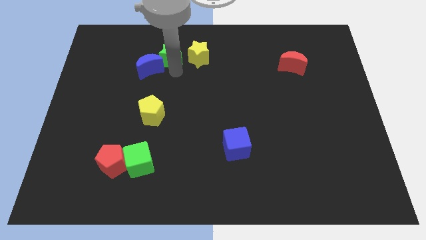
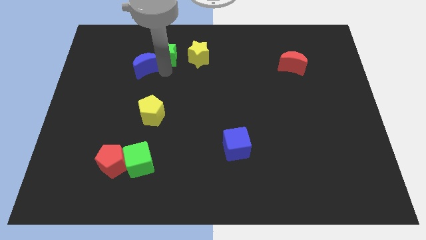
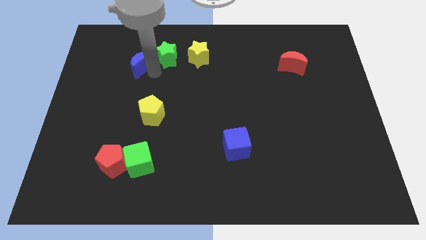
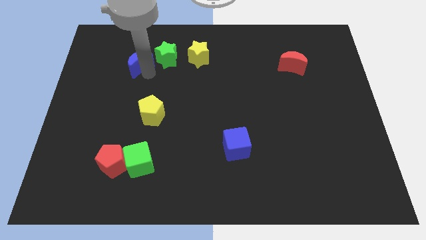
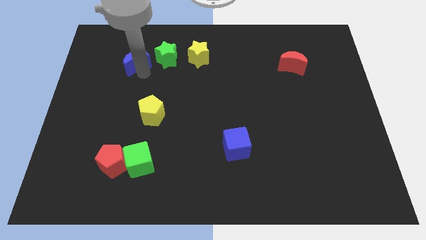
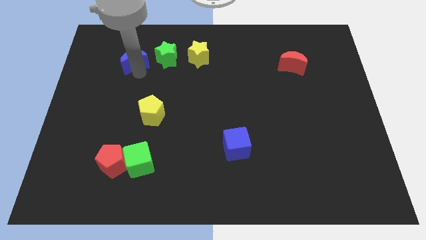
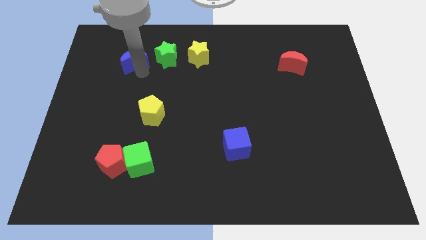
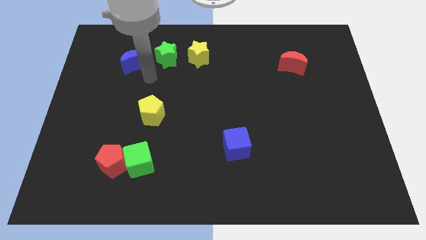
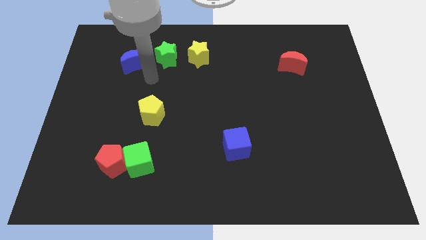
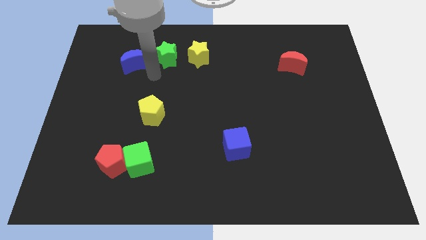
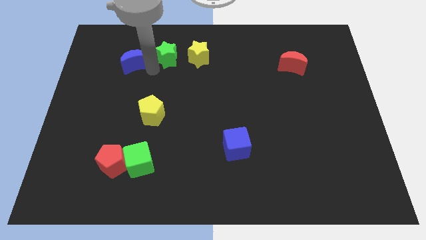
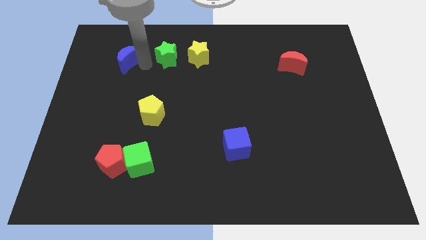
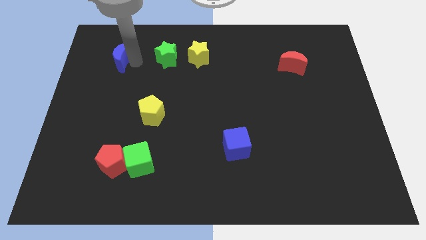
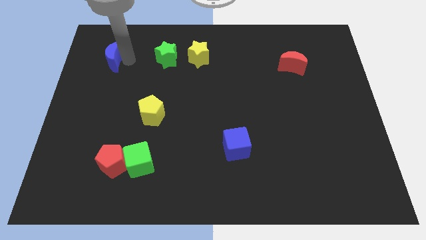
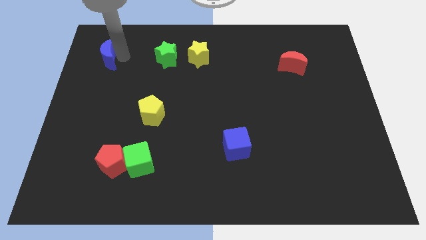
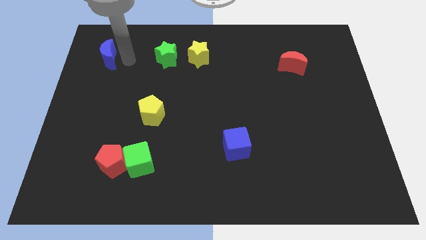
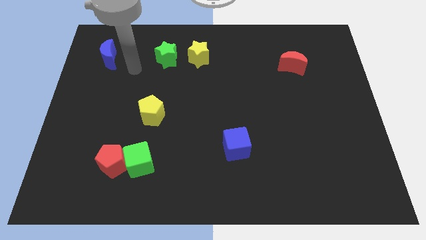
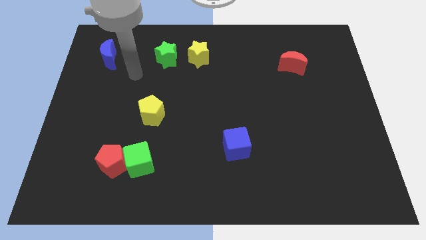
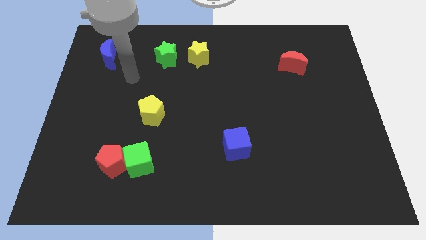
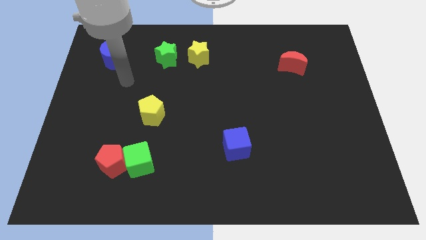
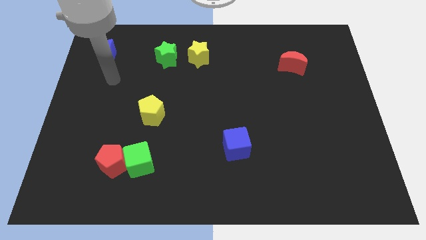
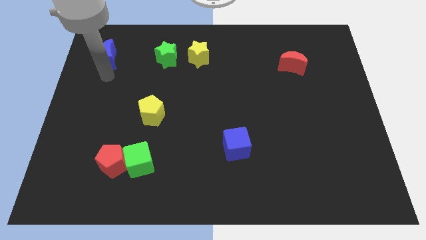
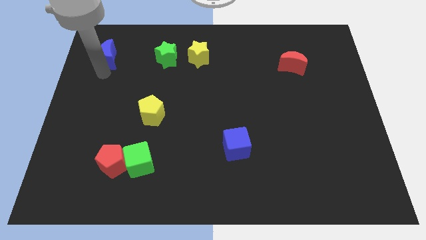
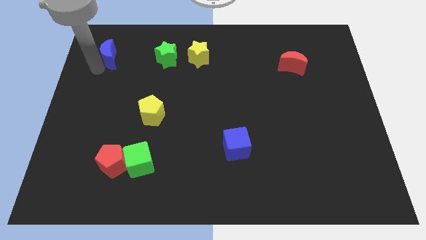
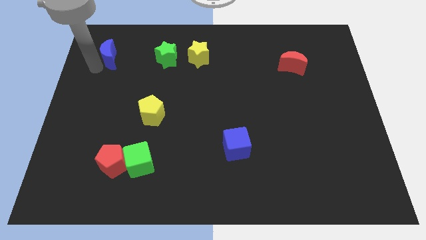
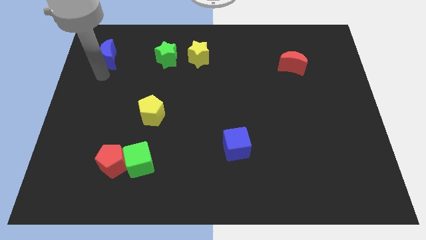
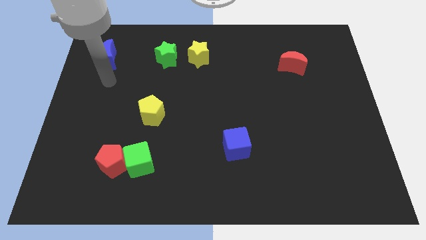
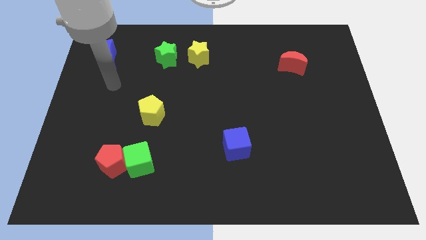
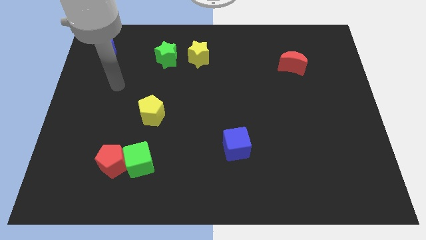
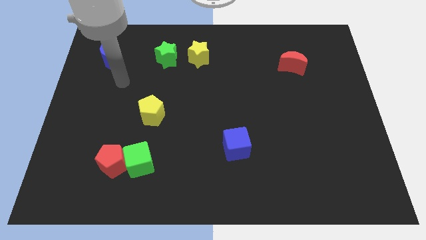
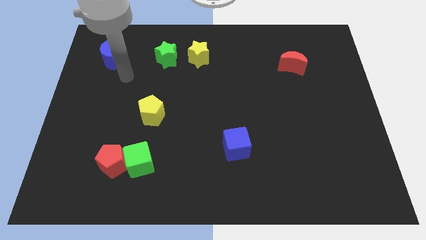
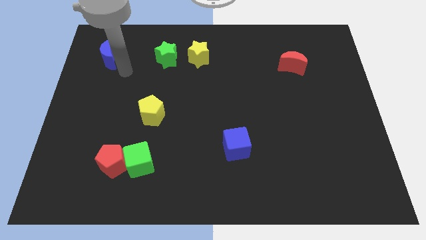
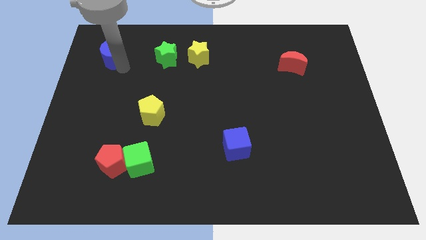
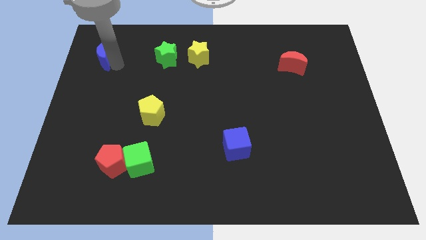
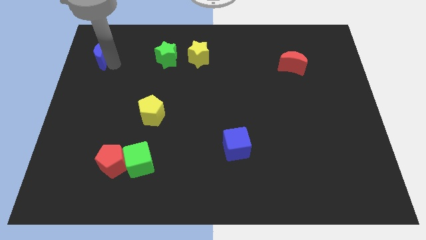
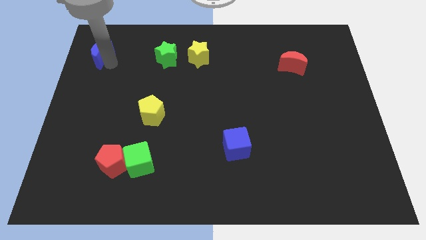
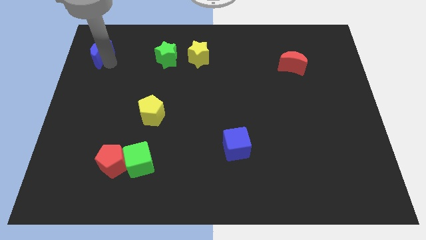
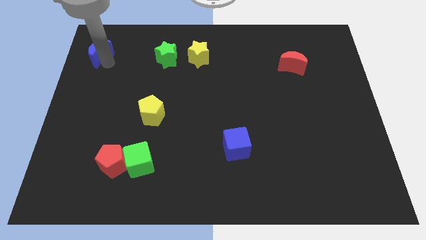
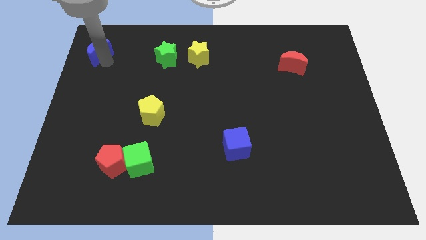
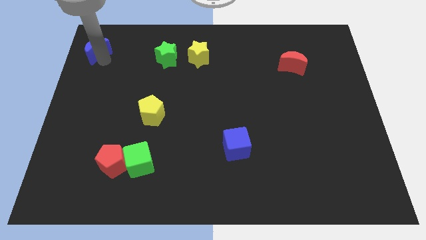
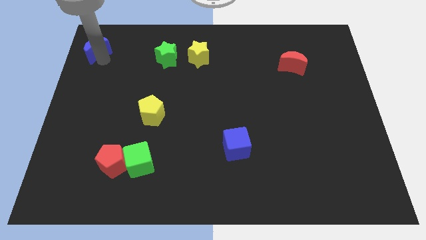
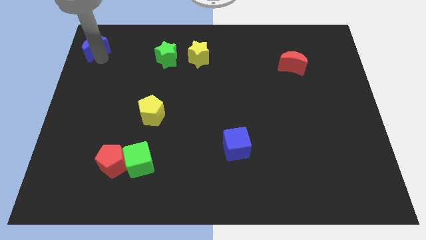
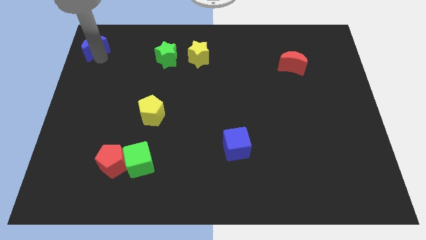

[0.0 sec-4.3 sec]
move the blue crescent to the left top corner of the board

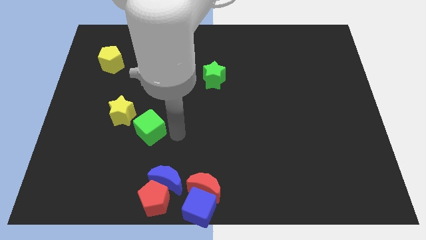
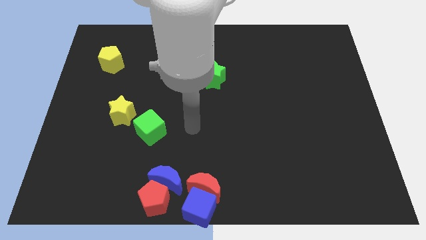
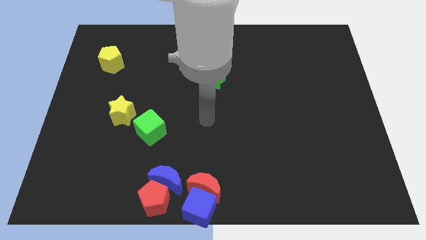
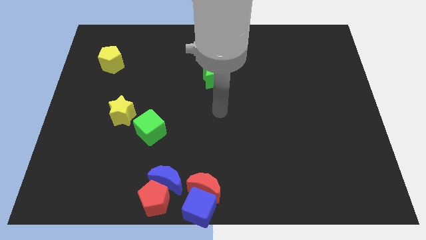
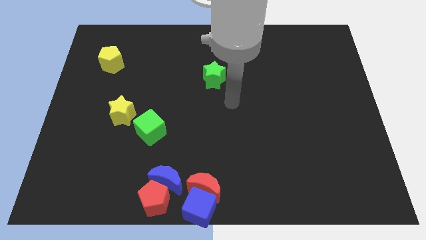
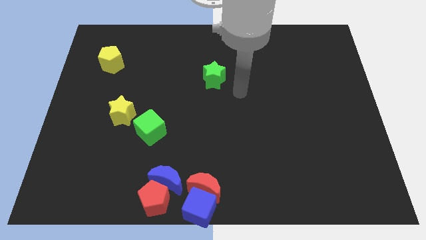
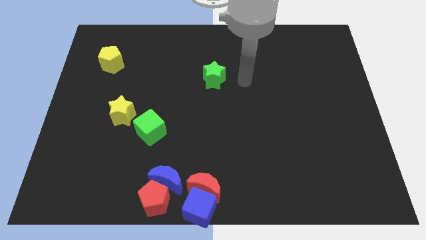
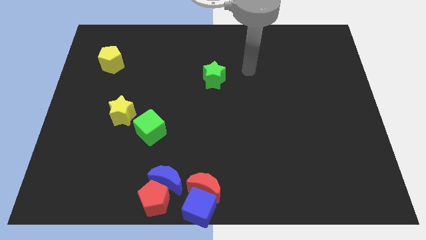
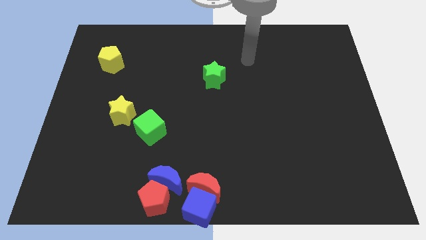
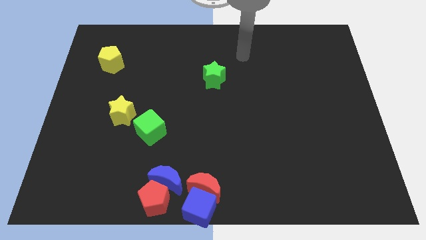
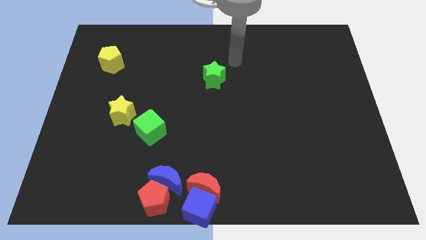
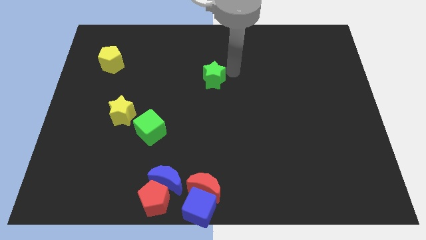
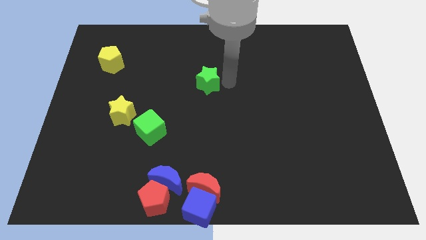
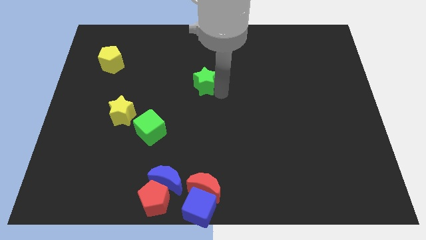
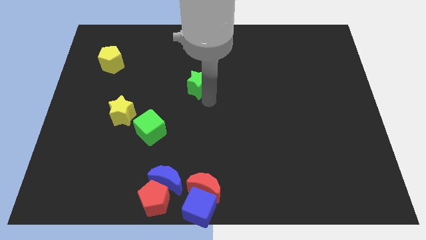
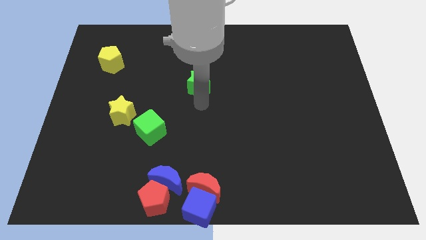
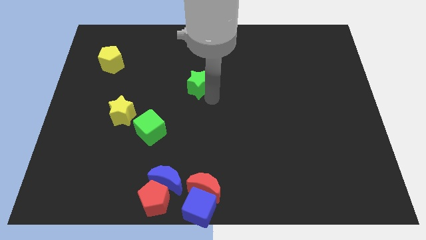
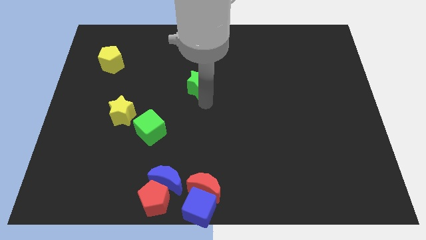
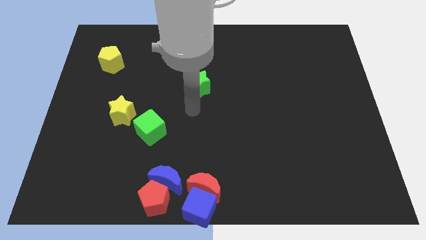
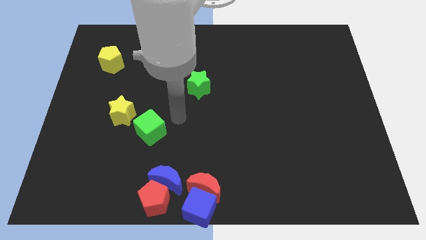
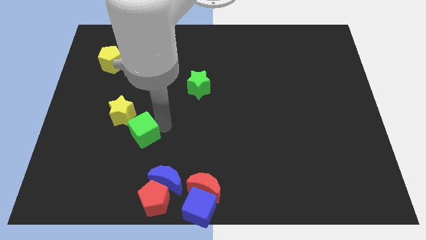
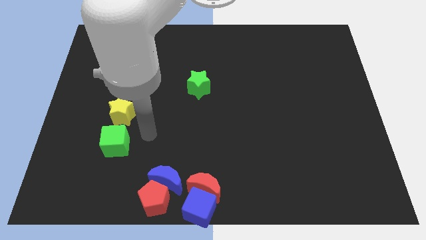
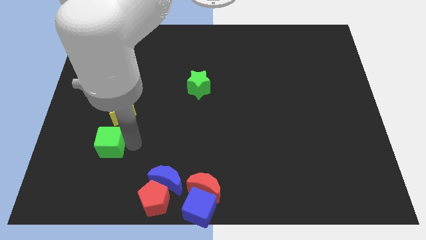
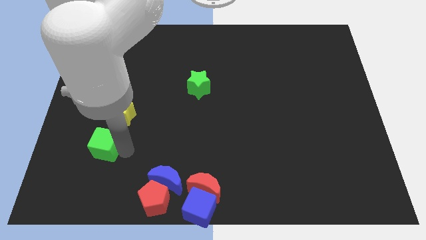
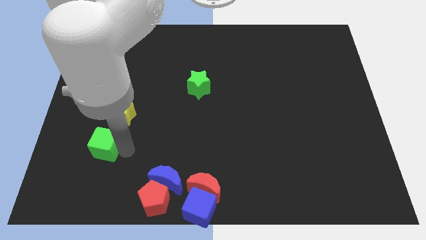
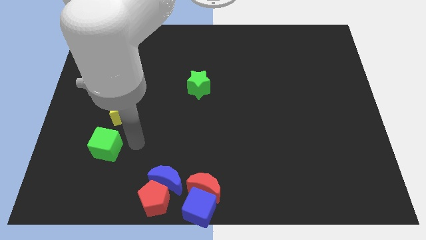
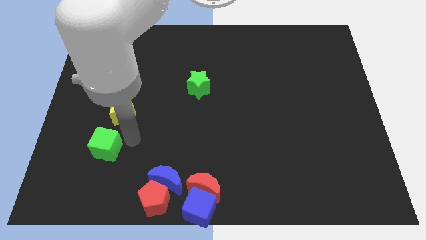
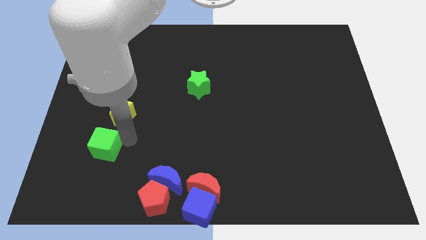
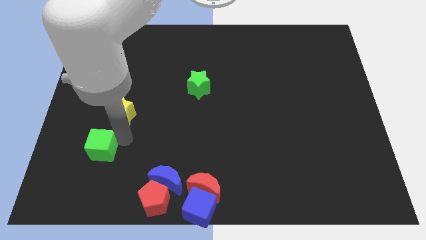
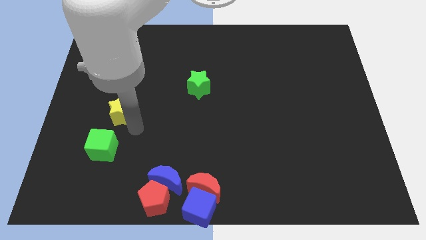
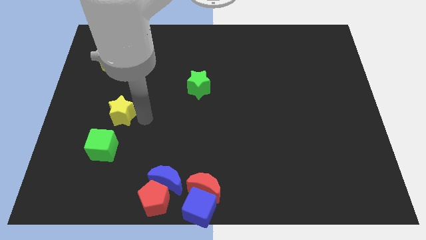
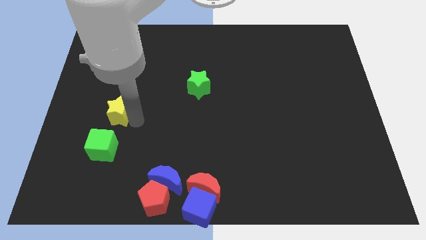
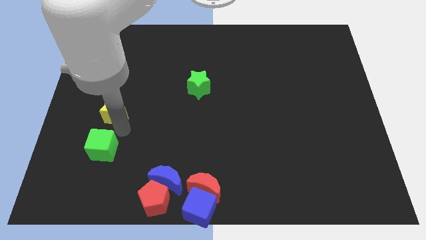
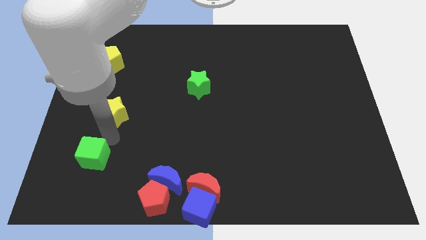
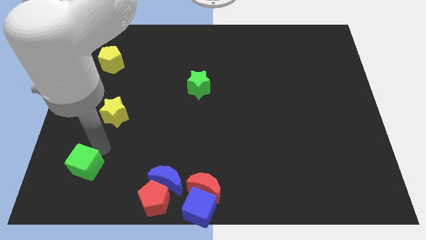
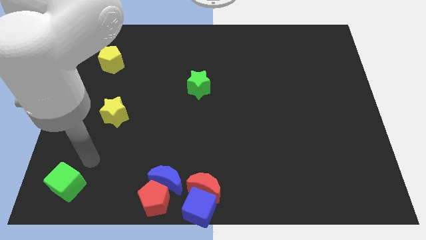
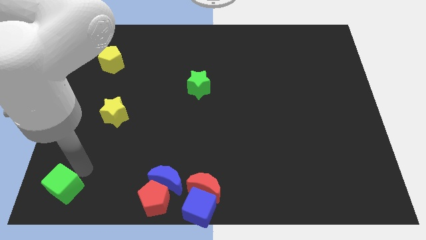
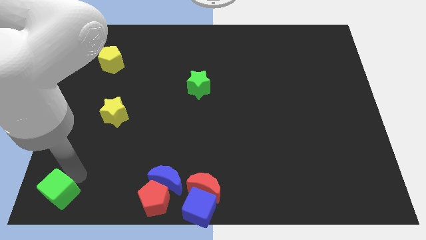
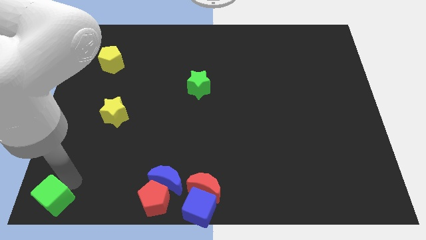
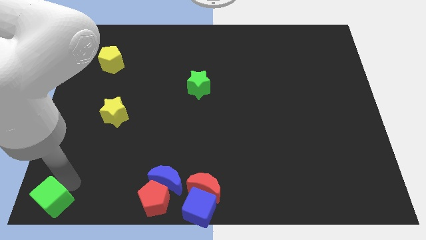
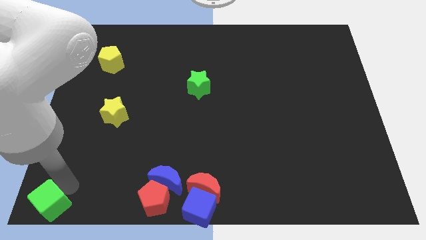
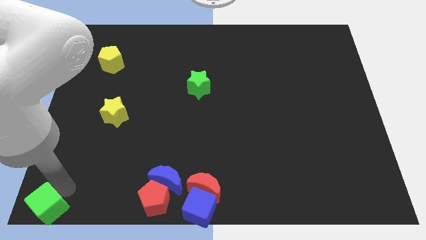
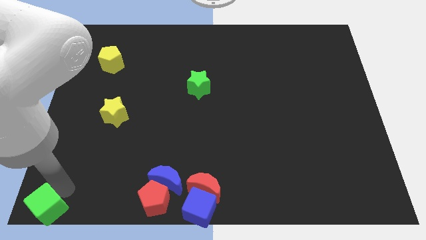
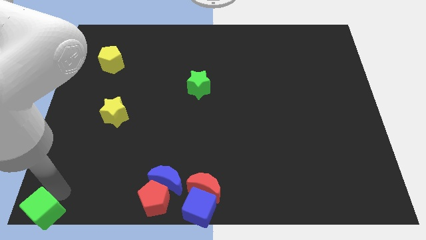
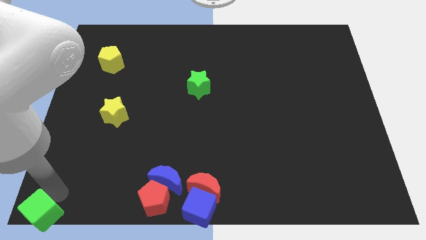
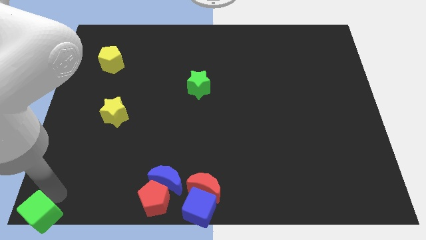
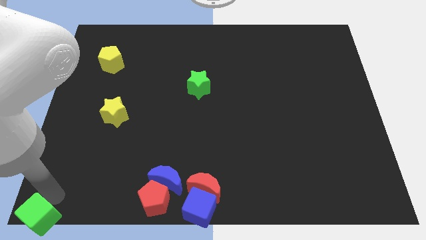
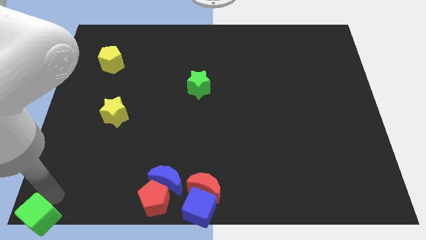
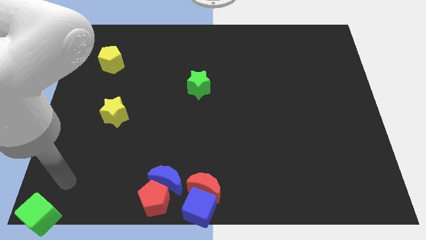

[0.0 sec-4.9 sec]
move the green cube towards the bottom left corner of the board
